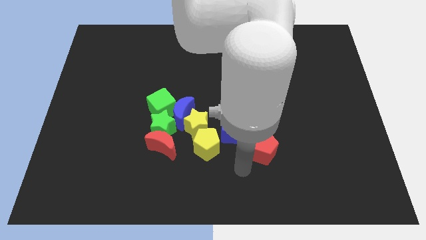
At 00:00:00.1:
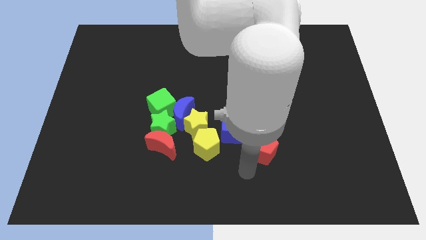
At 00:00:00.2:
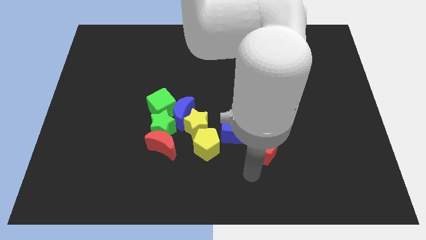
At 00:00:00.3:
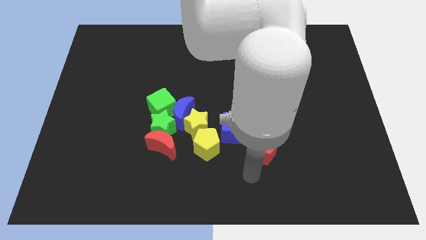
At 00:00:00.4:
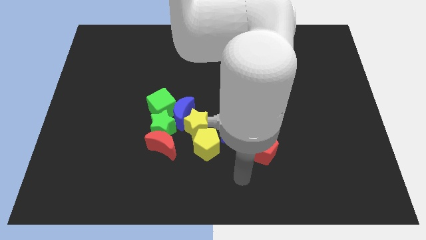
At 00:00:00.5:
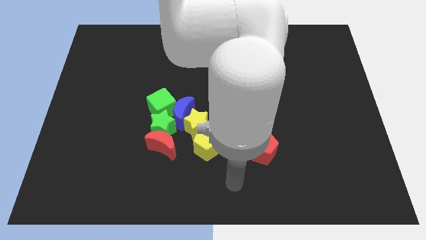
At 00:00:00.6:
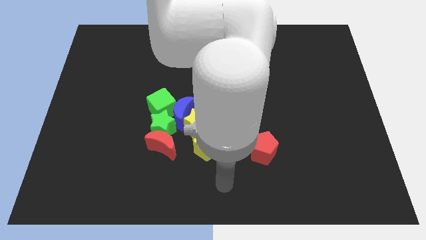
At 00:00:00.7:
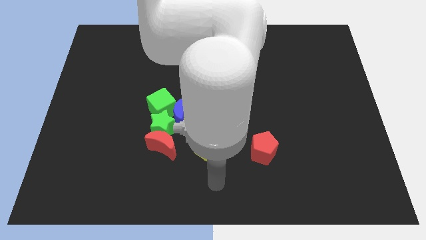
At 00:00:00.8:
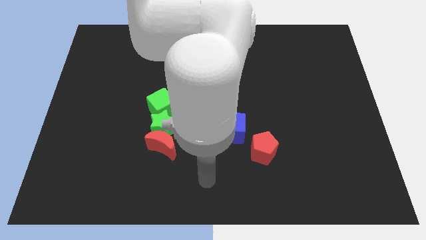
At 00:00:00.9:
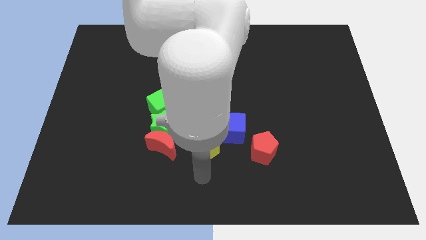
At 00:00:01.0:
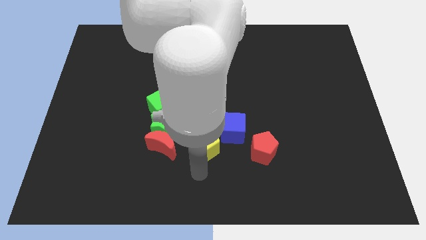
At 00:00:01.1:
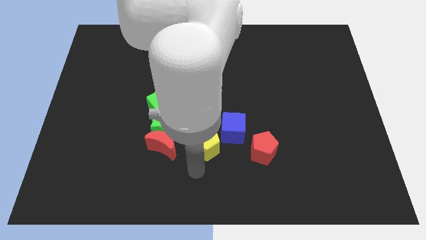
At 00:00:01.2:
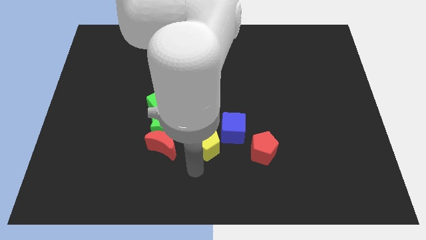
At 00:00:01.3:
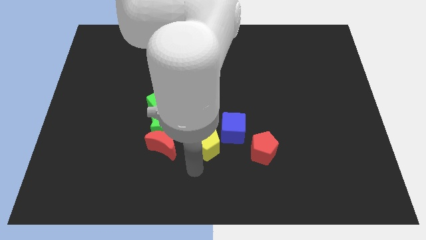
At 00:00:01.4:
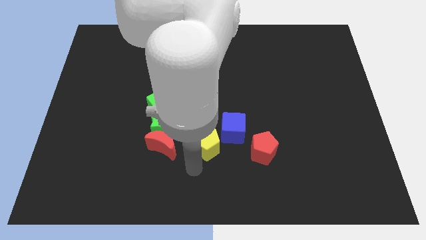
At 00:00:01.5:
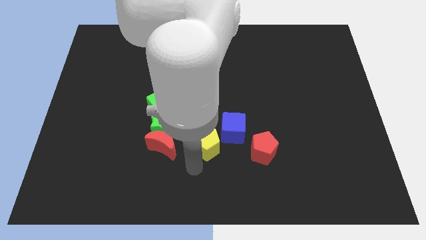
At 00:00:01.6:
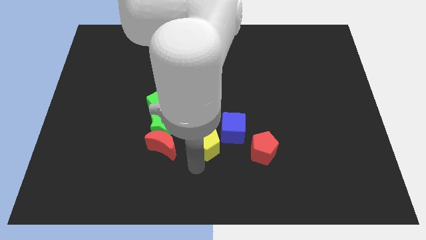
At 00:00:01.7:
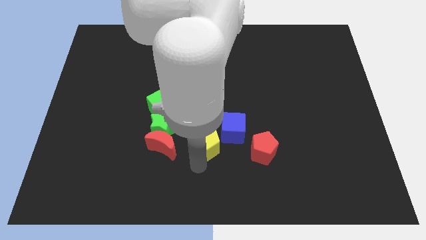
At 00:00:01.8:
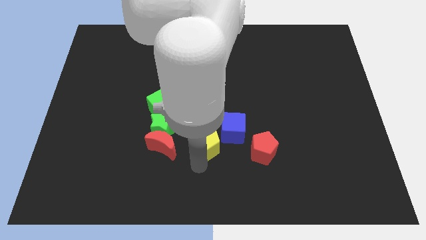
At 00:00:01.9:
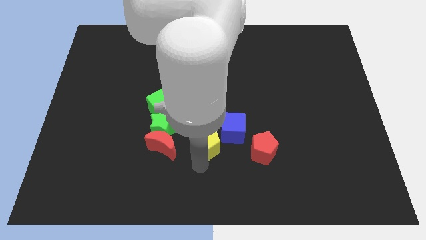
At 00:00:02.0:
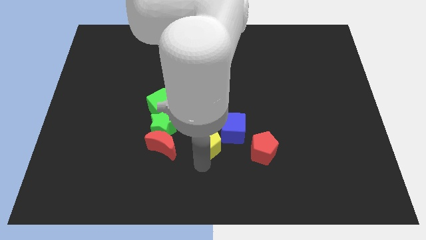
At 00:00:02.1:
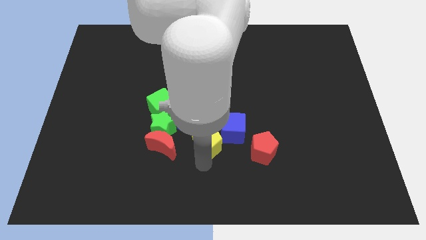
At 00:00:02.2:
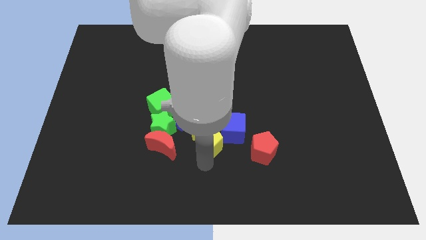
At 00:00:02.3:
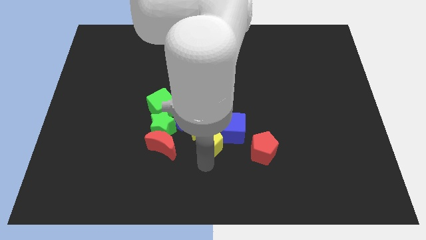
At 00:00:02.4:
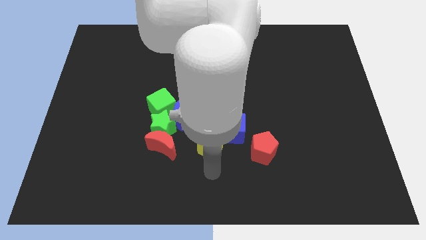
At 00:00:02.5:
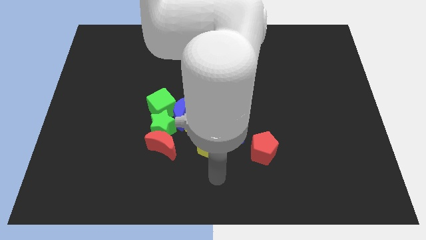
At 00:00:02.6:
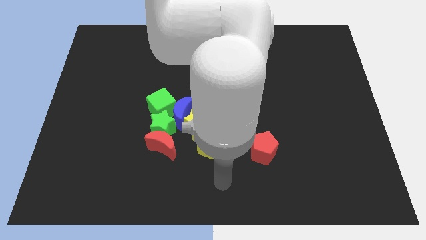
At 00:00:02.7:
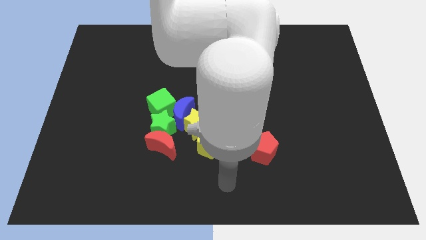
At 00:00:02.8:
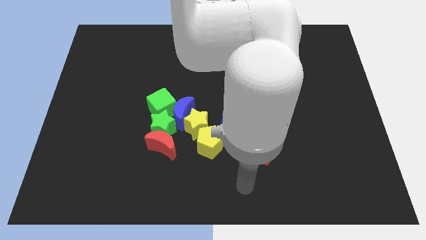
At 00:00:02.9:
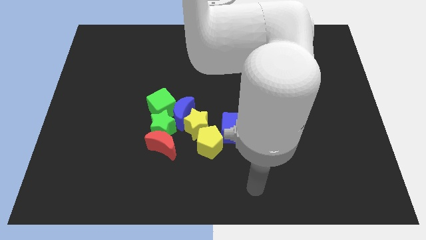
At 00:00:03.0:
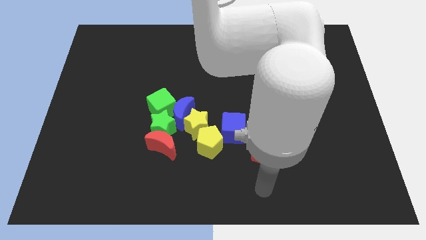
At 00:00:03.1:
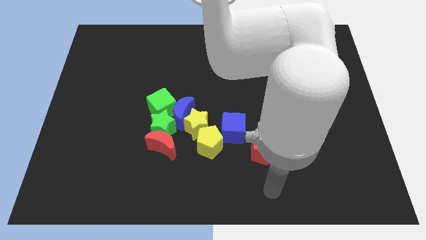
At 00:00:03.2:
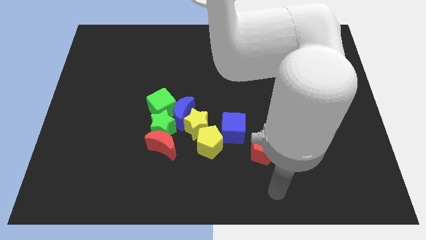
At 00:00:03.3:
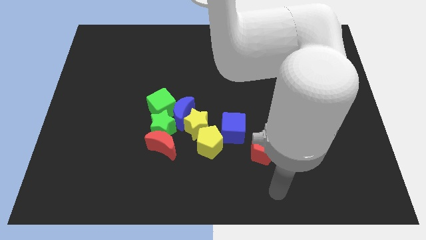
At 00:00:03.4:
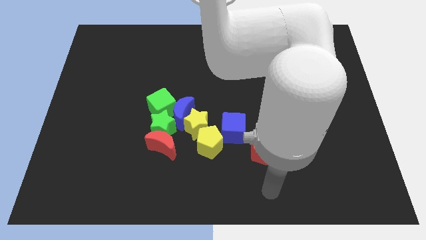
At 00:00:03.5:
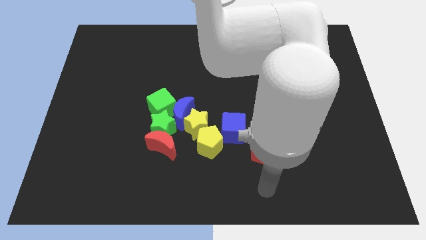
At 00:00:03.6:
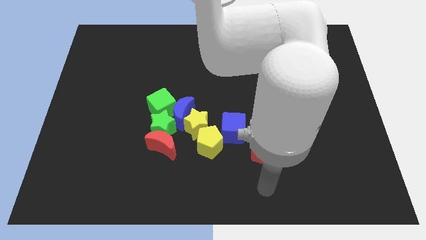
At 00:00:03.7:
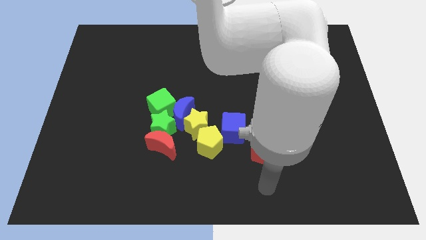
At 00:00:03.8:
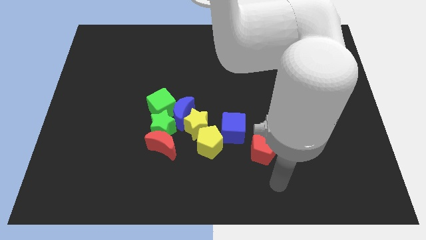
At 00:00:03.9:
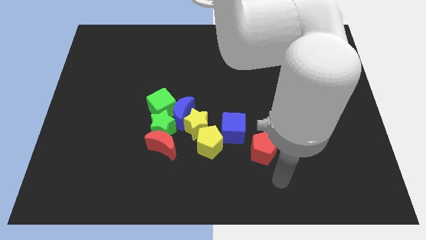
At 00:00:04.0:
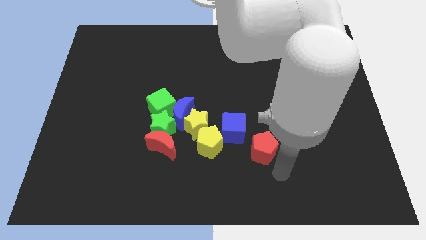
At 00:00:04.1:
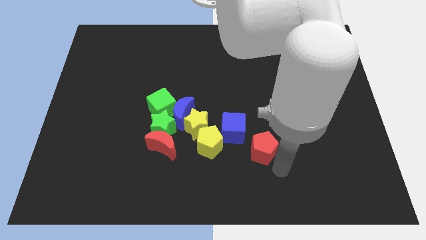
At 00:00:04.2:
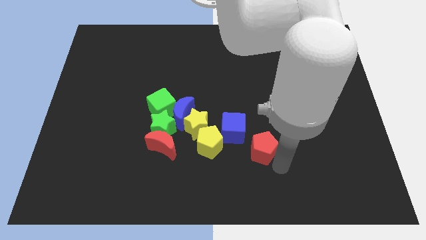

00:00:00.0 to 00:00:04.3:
push the yellow pentagon into the blue cube

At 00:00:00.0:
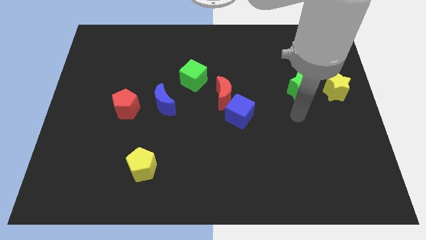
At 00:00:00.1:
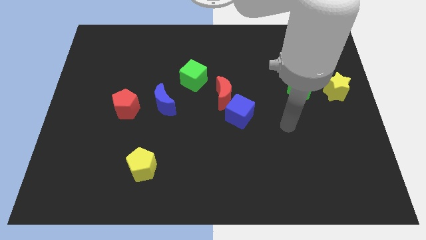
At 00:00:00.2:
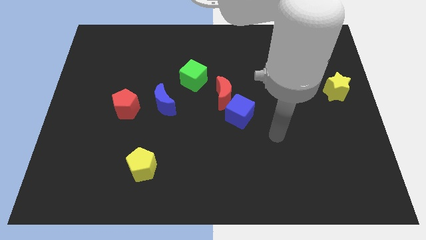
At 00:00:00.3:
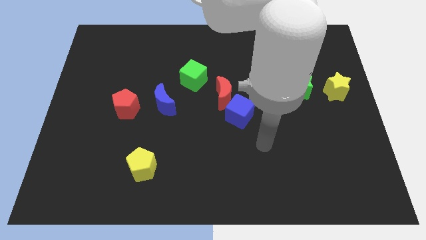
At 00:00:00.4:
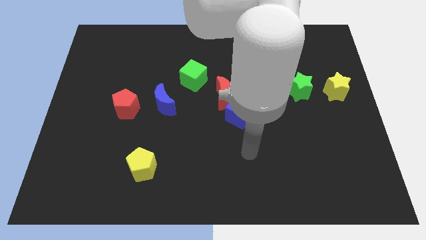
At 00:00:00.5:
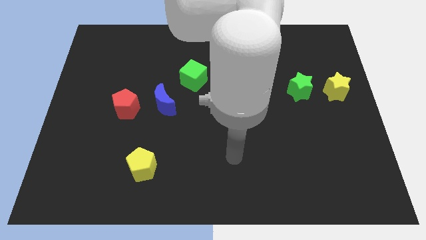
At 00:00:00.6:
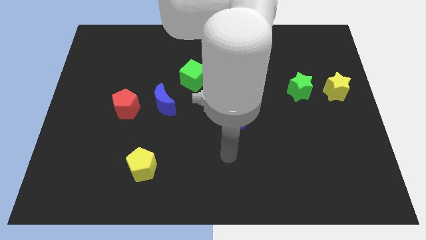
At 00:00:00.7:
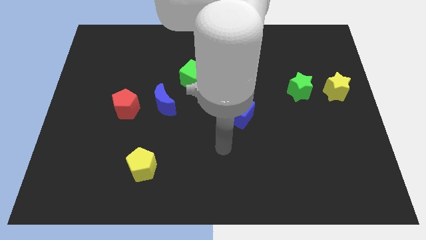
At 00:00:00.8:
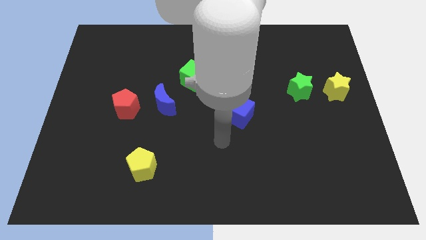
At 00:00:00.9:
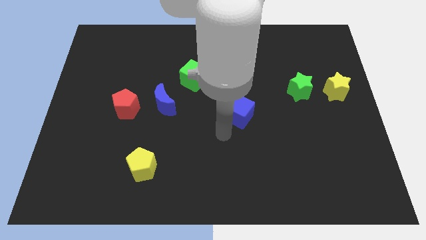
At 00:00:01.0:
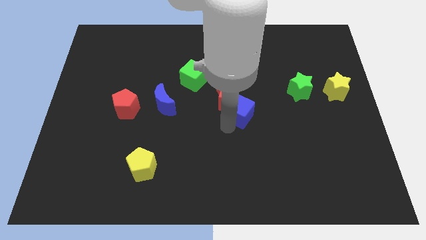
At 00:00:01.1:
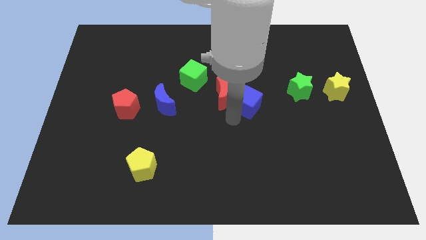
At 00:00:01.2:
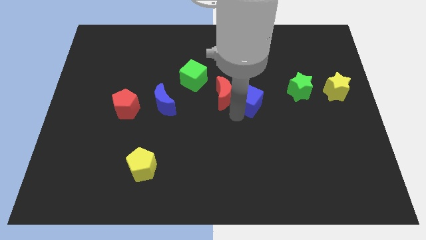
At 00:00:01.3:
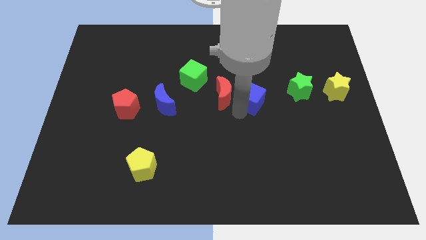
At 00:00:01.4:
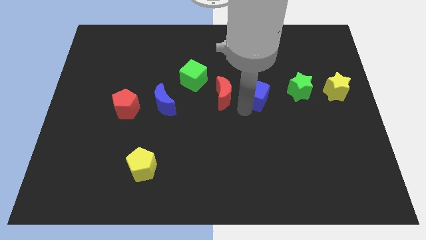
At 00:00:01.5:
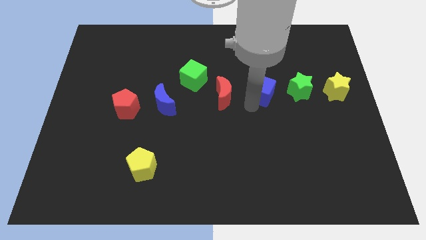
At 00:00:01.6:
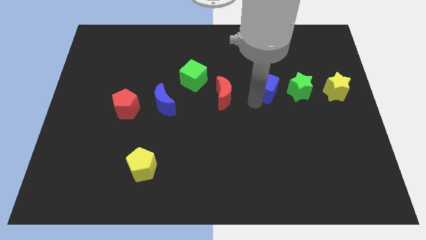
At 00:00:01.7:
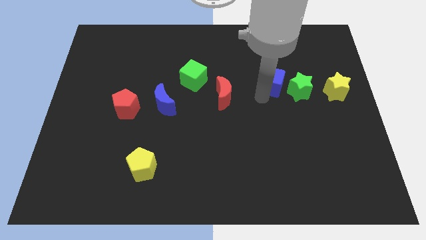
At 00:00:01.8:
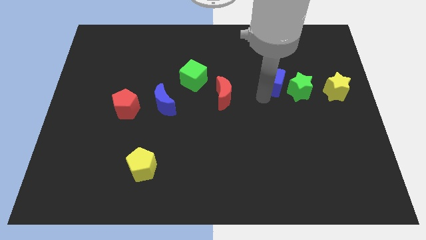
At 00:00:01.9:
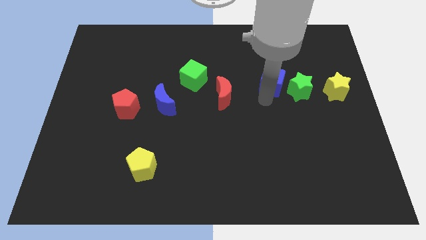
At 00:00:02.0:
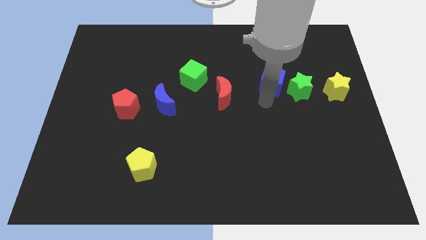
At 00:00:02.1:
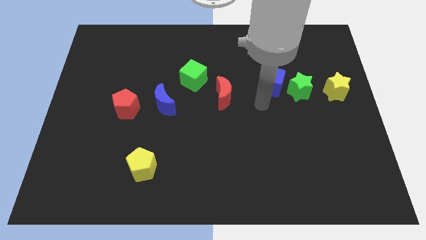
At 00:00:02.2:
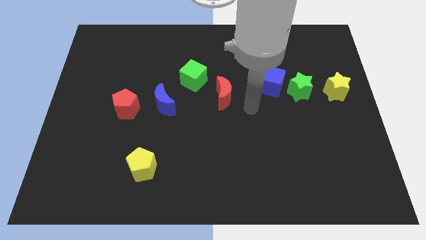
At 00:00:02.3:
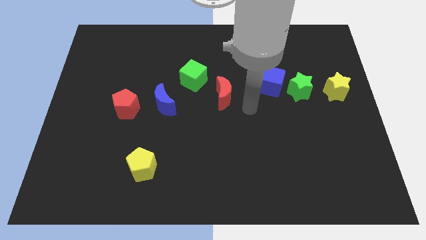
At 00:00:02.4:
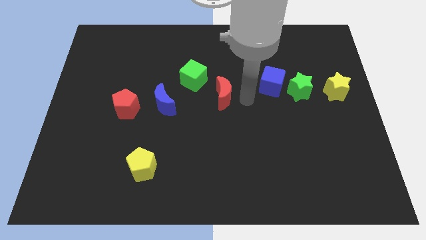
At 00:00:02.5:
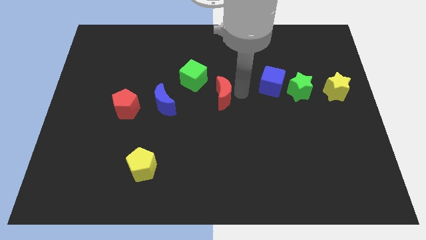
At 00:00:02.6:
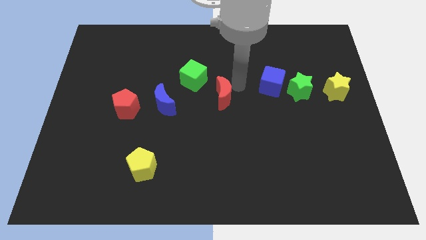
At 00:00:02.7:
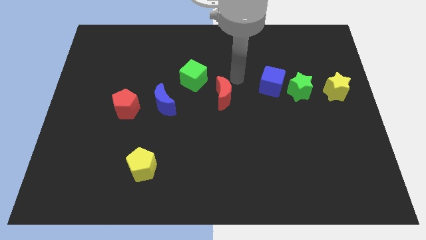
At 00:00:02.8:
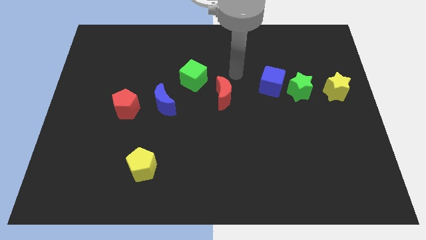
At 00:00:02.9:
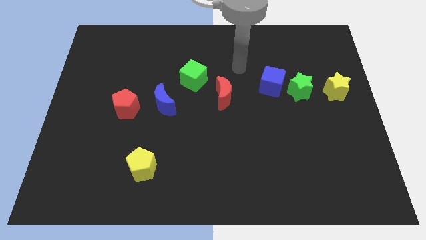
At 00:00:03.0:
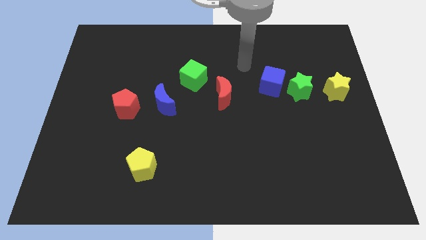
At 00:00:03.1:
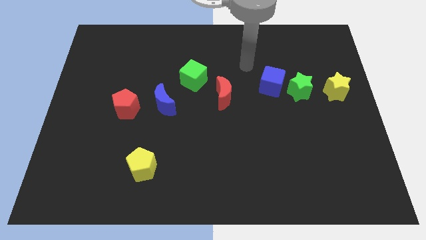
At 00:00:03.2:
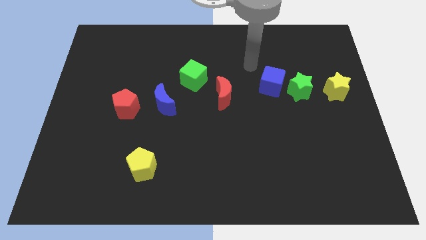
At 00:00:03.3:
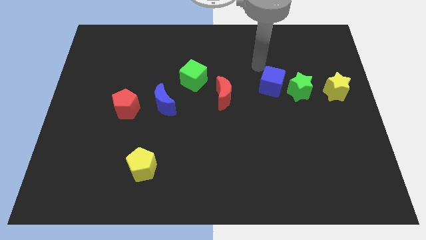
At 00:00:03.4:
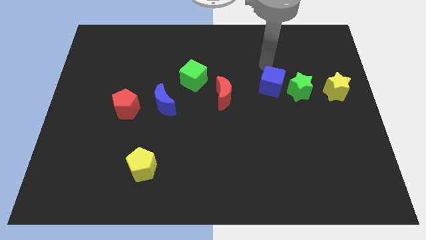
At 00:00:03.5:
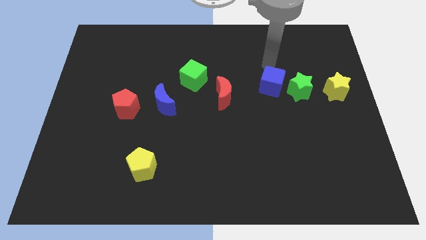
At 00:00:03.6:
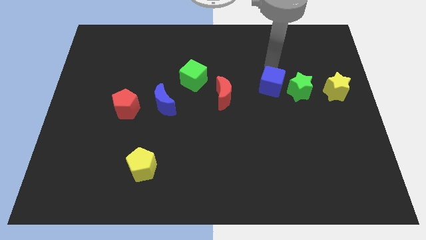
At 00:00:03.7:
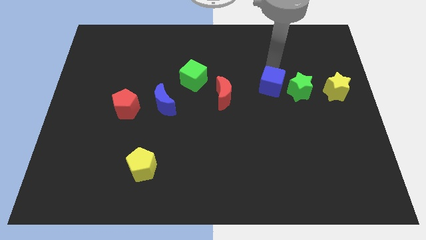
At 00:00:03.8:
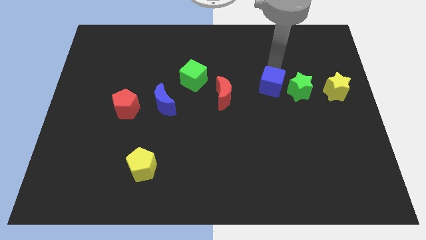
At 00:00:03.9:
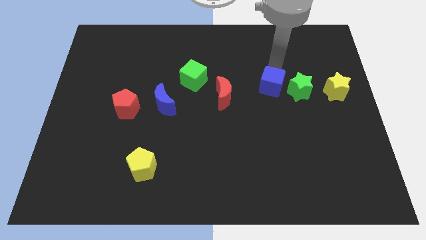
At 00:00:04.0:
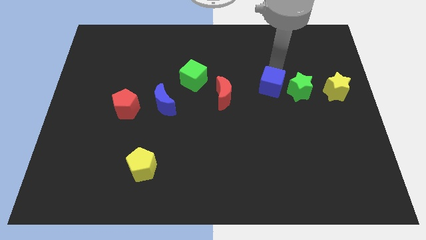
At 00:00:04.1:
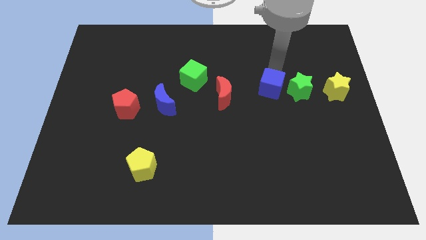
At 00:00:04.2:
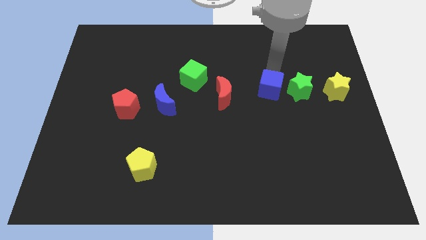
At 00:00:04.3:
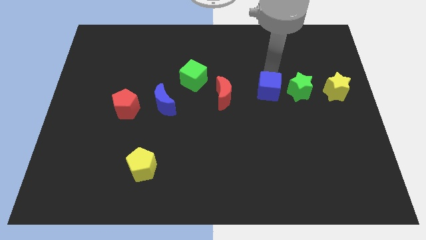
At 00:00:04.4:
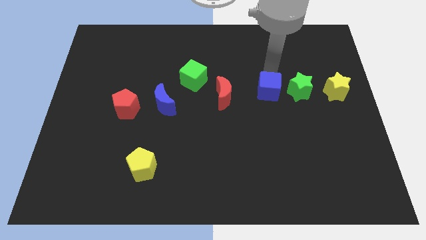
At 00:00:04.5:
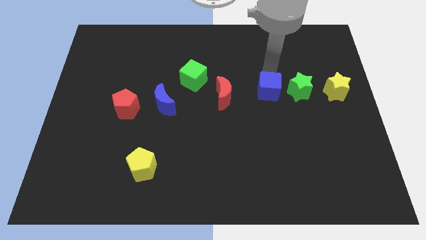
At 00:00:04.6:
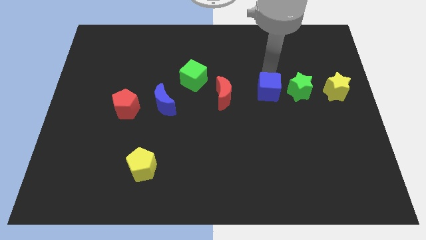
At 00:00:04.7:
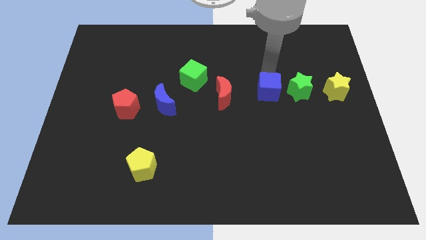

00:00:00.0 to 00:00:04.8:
place the blue cube horizontally to the right side of the red crescent
